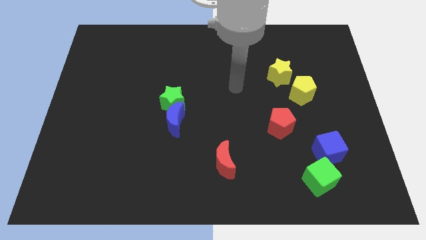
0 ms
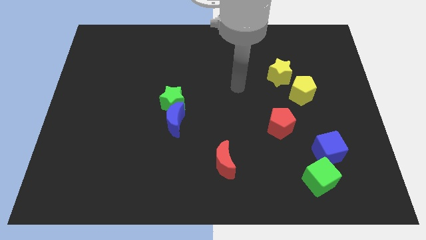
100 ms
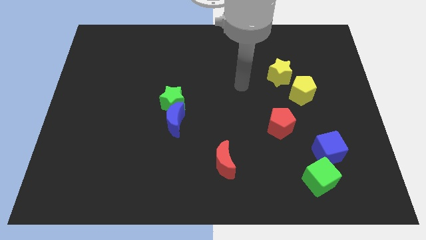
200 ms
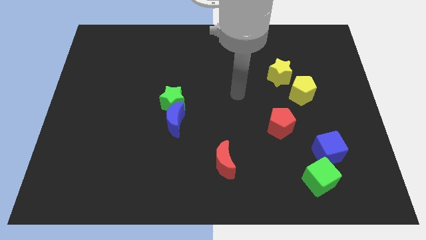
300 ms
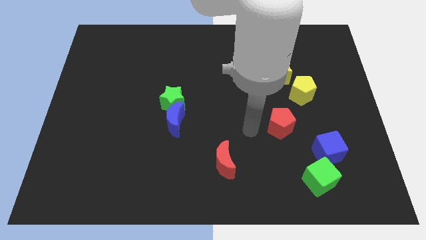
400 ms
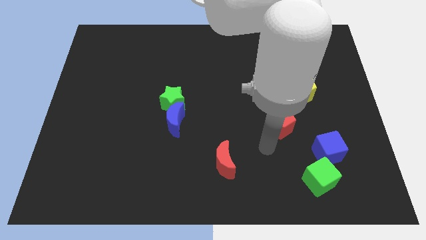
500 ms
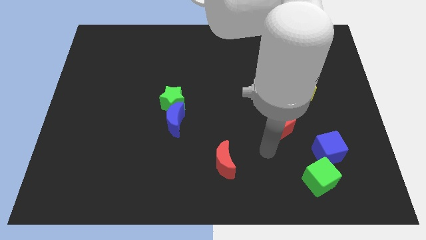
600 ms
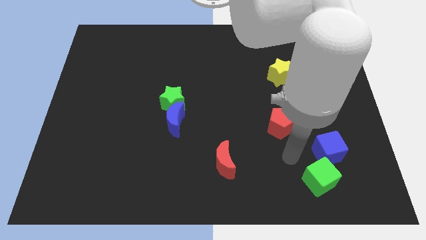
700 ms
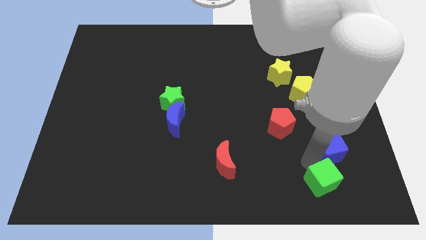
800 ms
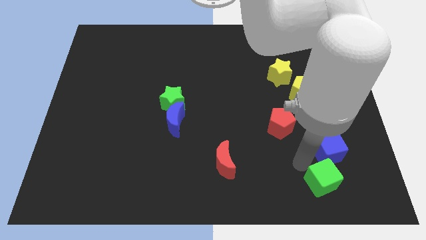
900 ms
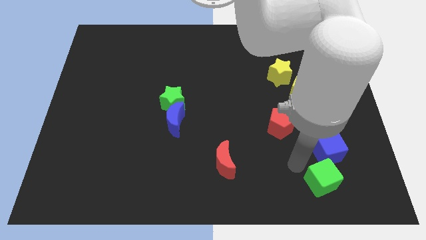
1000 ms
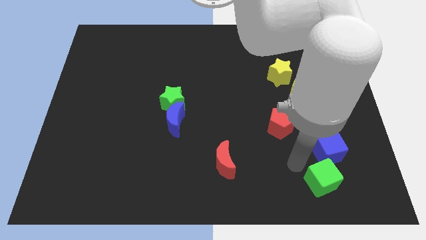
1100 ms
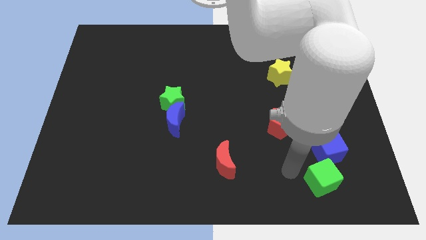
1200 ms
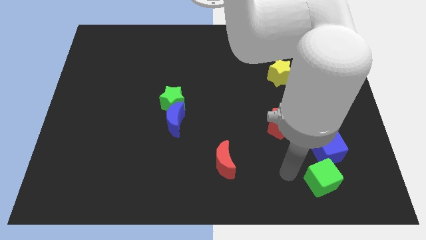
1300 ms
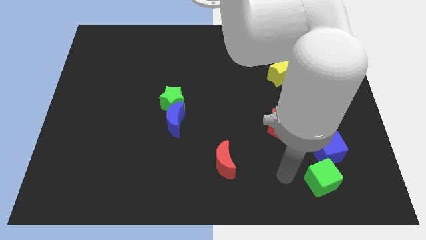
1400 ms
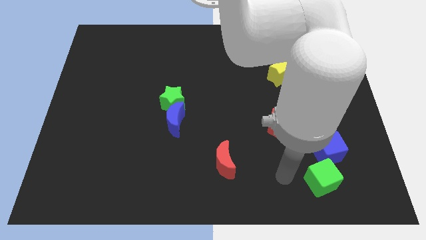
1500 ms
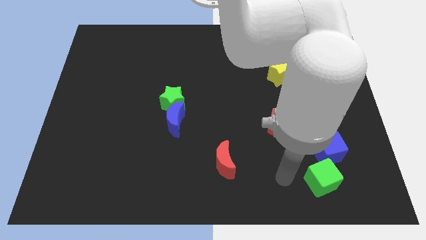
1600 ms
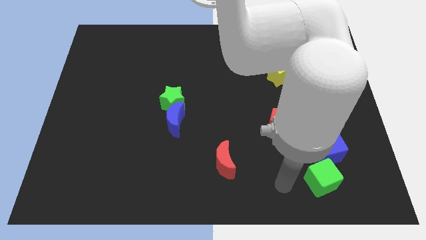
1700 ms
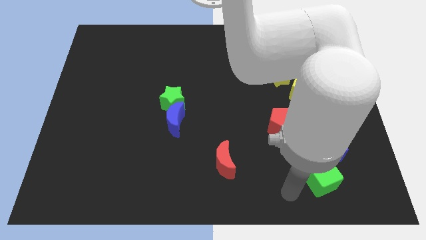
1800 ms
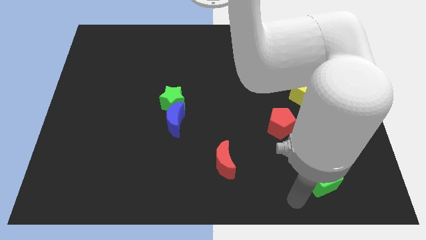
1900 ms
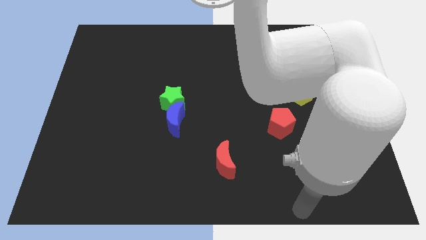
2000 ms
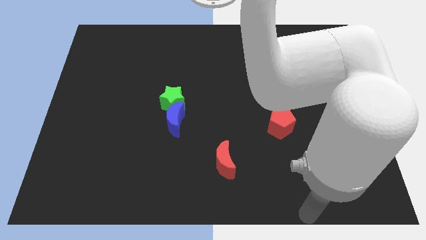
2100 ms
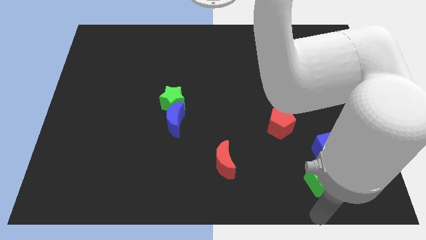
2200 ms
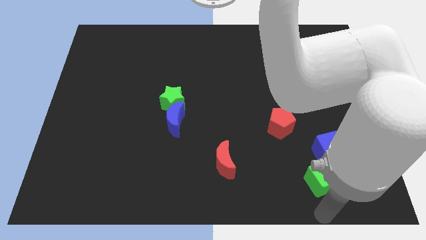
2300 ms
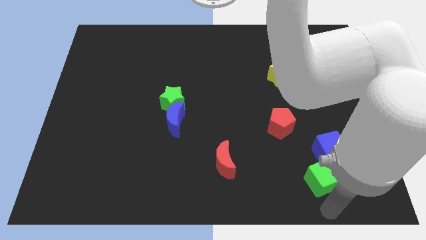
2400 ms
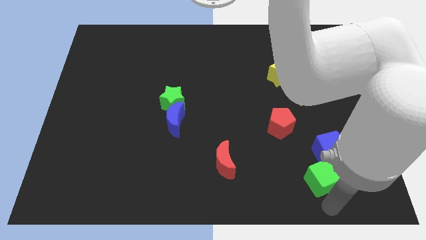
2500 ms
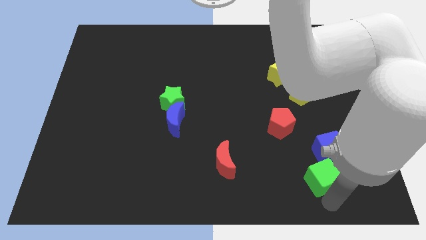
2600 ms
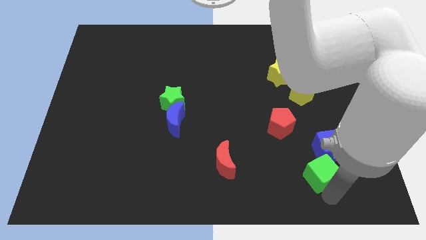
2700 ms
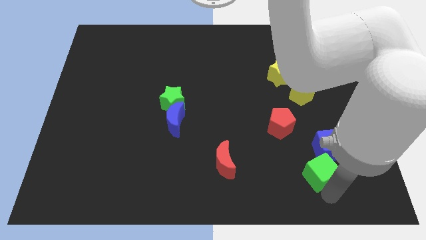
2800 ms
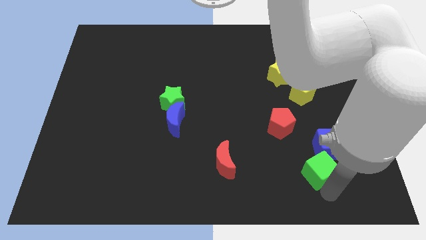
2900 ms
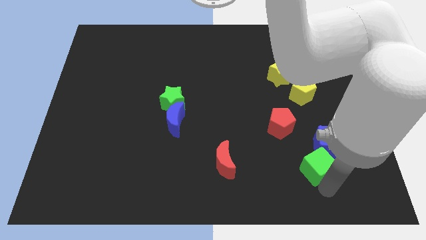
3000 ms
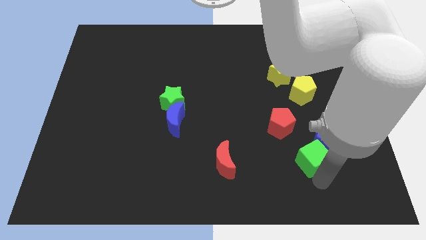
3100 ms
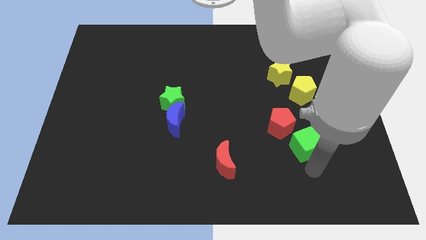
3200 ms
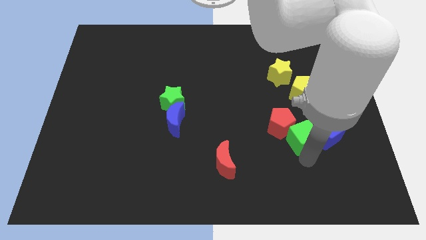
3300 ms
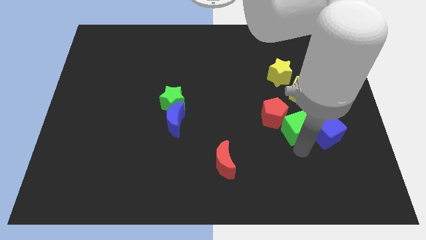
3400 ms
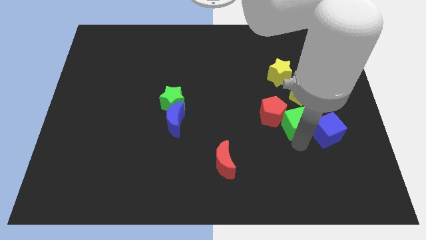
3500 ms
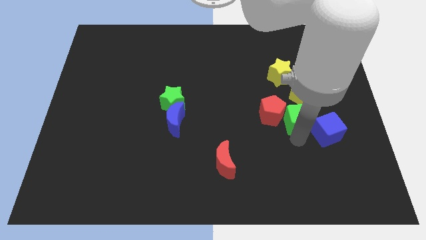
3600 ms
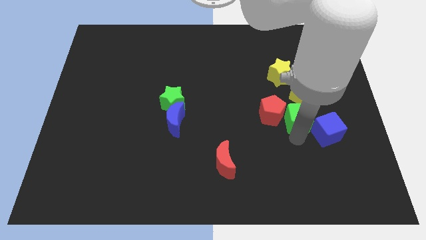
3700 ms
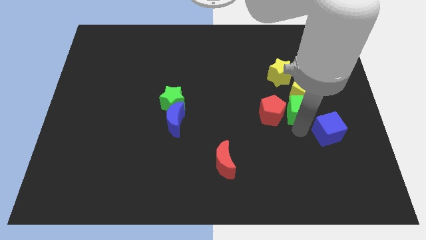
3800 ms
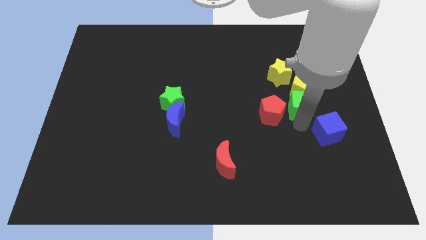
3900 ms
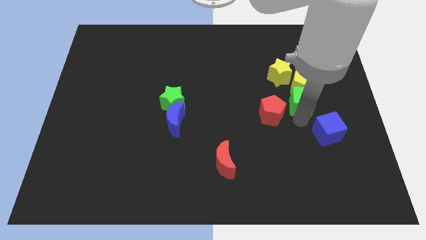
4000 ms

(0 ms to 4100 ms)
move the green cube close to the yellow pentagon

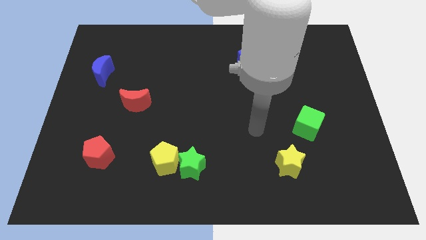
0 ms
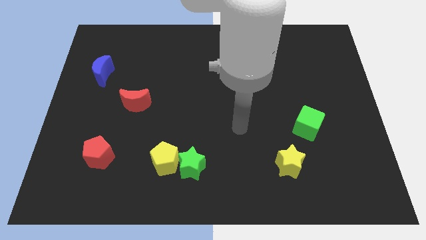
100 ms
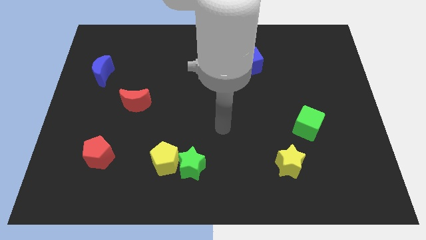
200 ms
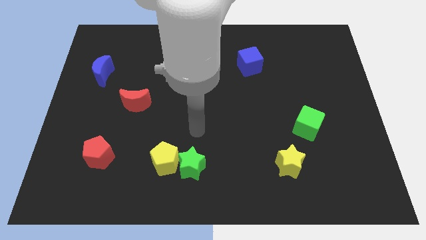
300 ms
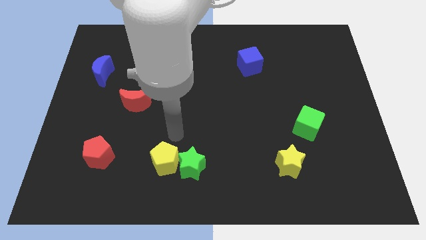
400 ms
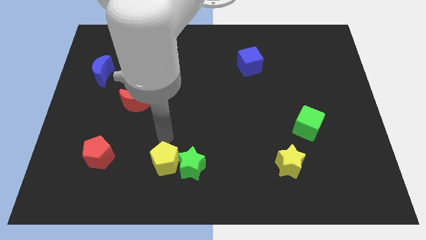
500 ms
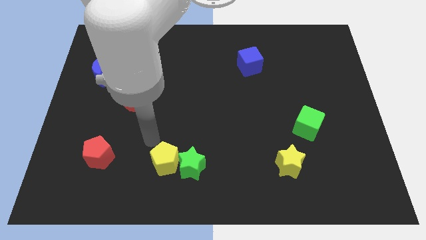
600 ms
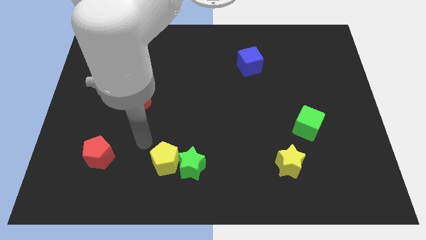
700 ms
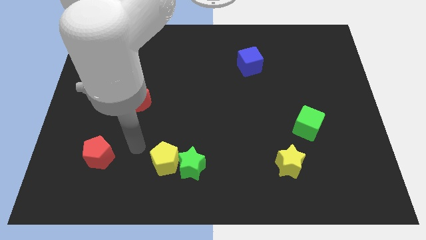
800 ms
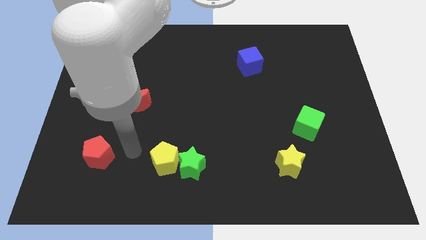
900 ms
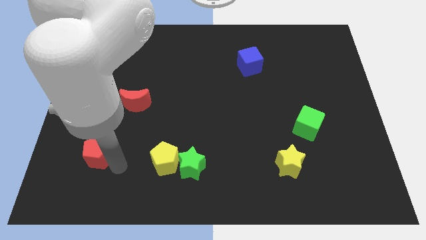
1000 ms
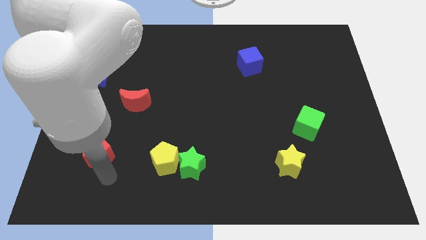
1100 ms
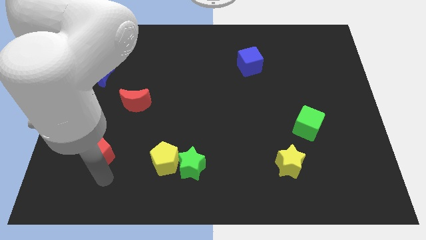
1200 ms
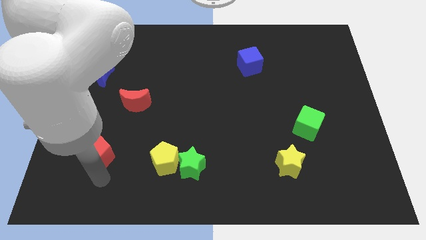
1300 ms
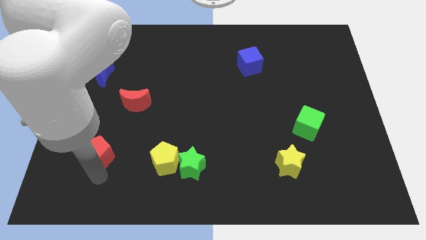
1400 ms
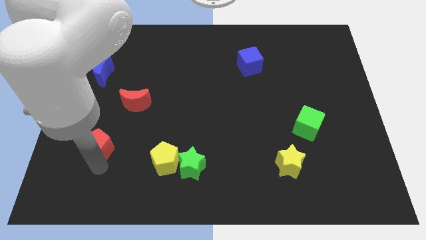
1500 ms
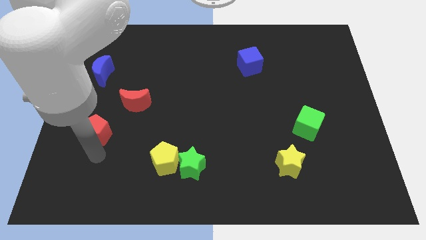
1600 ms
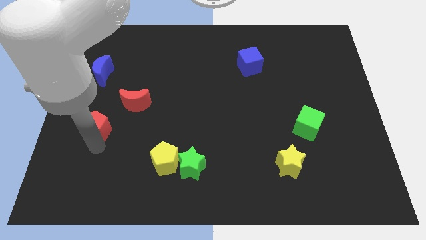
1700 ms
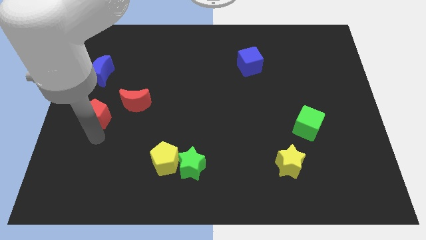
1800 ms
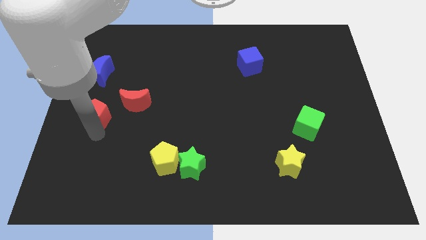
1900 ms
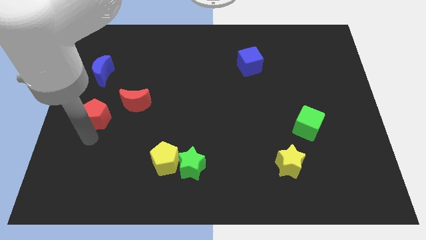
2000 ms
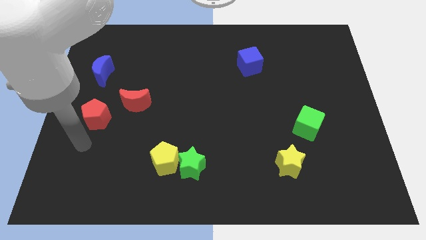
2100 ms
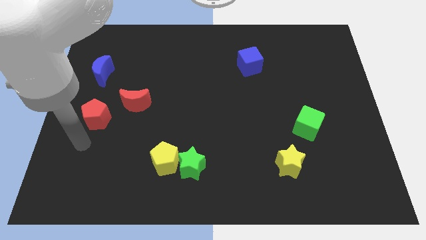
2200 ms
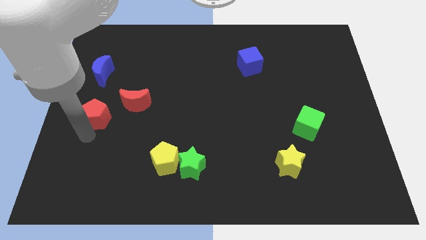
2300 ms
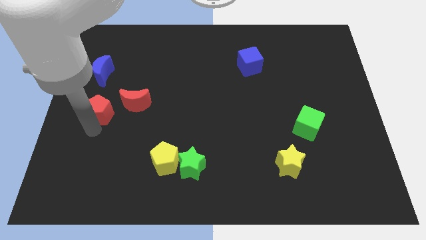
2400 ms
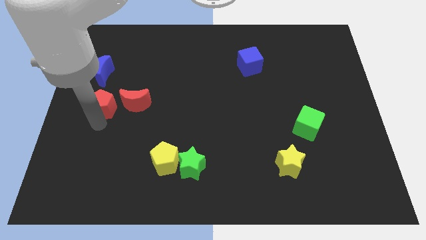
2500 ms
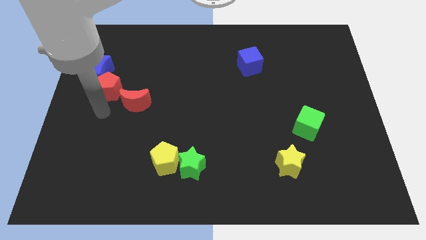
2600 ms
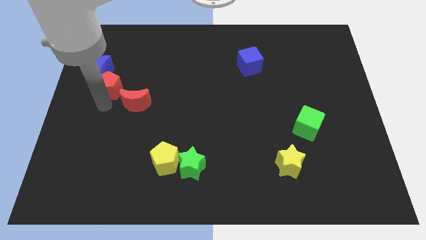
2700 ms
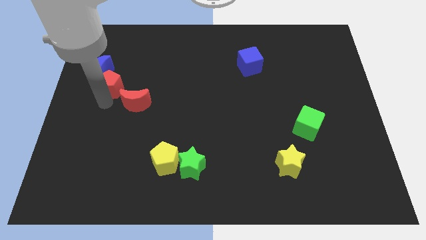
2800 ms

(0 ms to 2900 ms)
push the red pentagon next to the blue moon

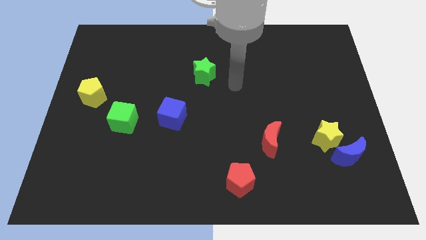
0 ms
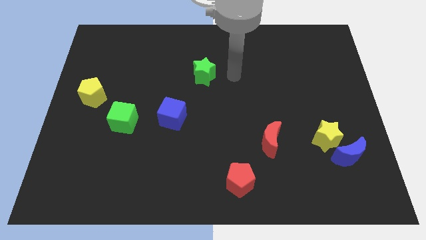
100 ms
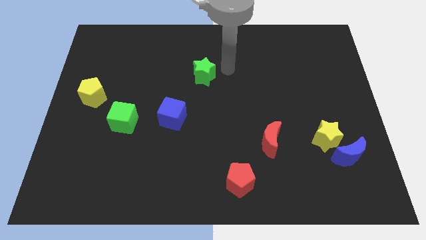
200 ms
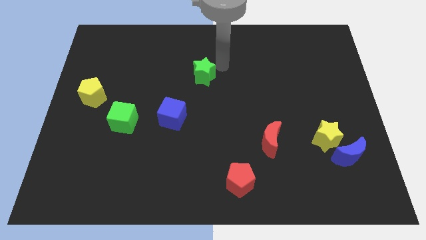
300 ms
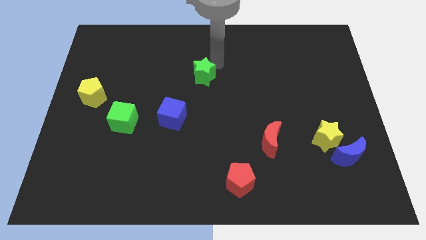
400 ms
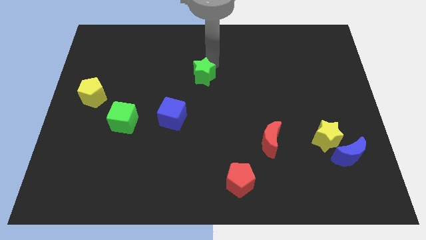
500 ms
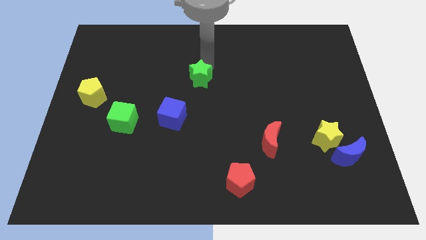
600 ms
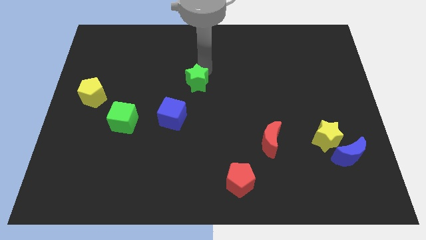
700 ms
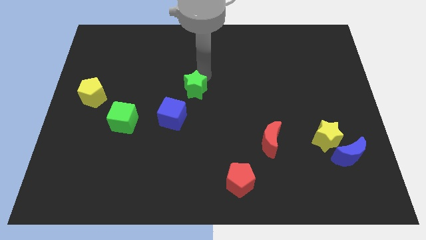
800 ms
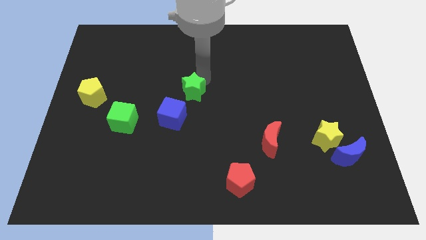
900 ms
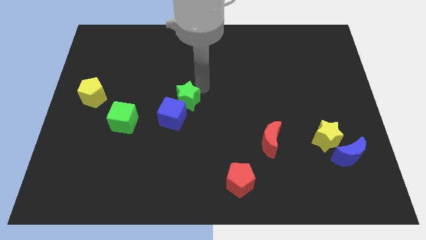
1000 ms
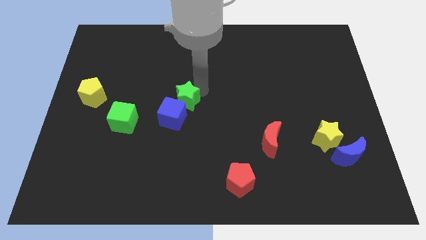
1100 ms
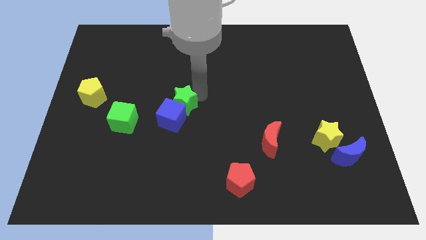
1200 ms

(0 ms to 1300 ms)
put the green star next to the blue cube

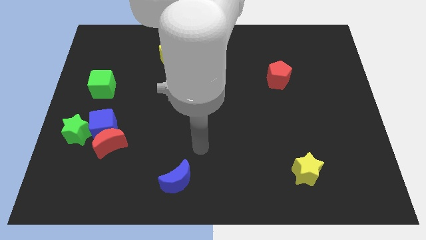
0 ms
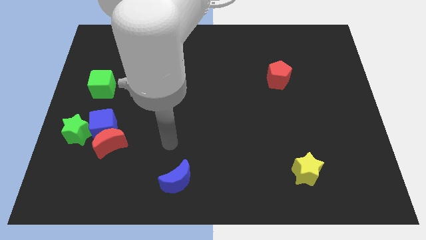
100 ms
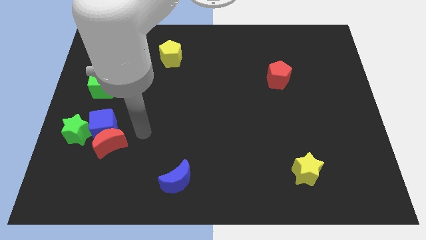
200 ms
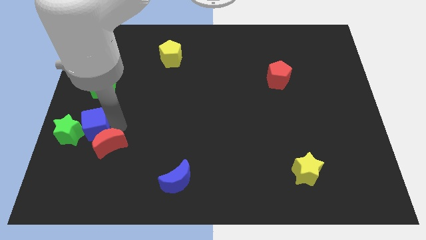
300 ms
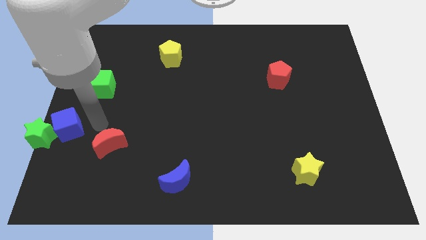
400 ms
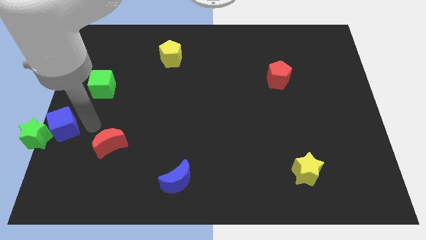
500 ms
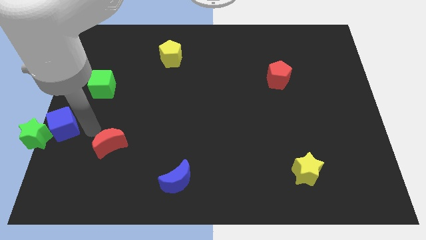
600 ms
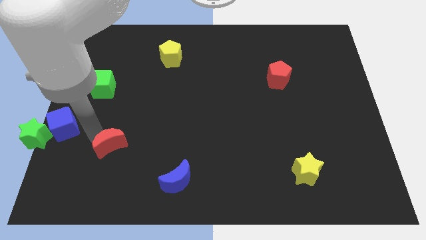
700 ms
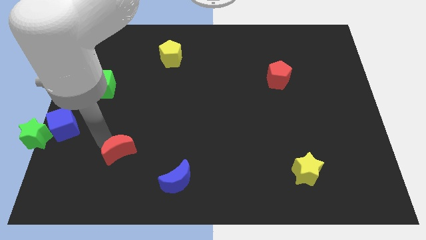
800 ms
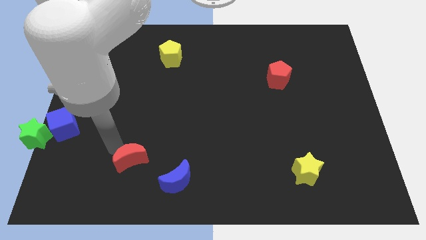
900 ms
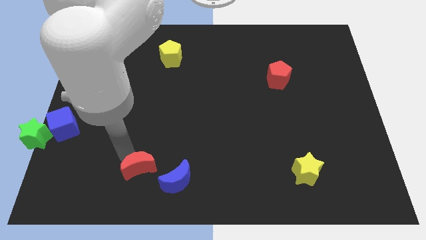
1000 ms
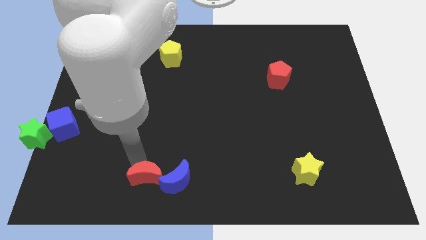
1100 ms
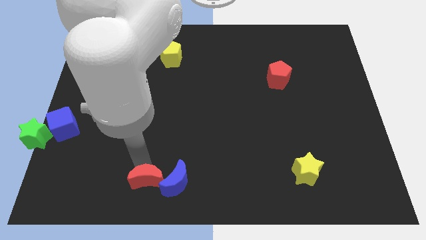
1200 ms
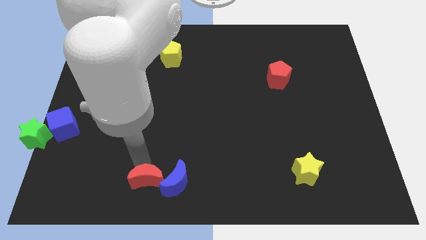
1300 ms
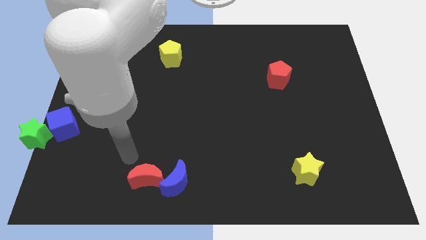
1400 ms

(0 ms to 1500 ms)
put the red moon next to the blue moon
